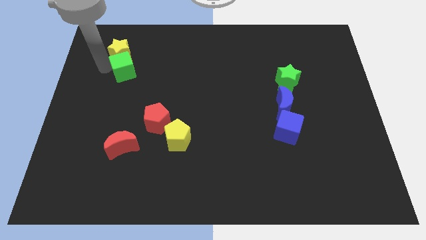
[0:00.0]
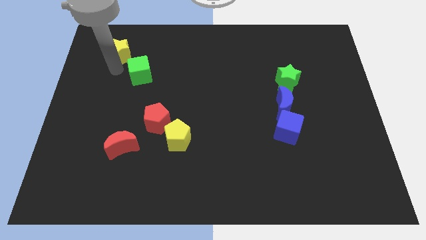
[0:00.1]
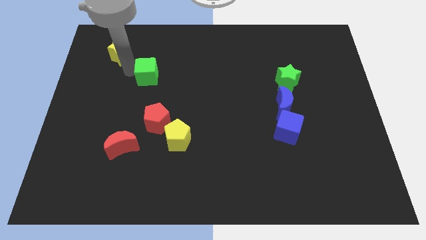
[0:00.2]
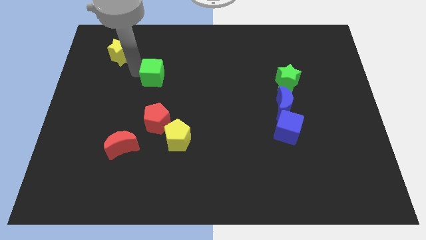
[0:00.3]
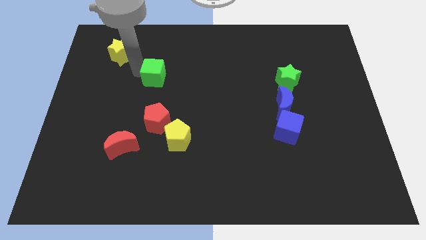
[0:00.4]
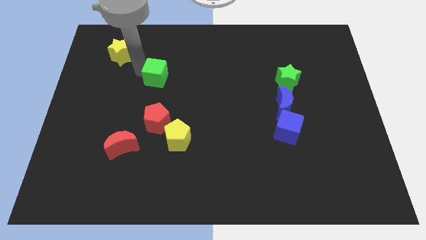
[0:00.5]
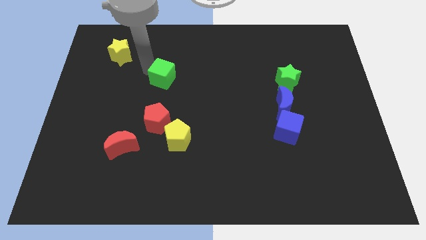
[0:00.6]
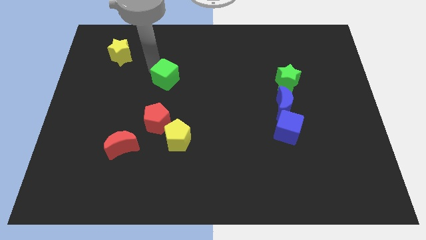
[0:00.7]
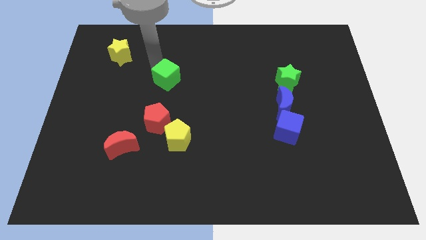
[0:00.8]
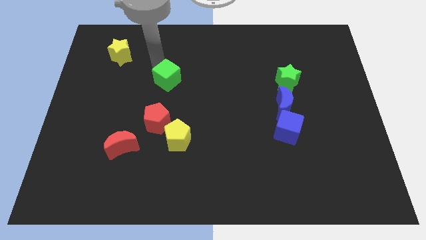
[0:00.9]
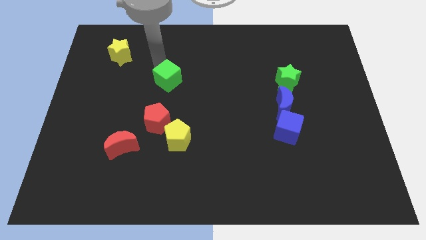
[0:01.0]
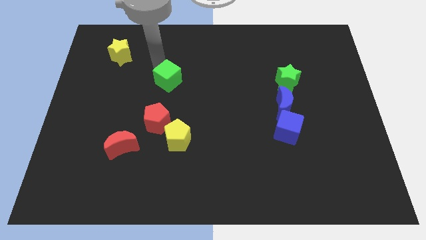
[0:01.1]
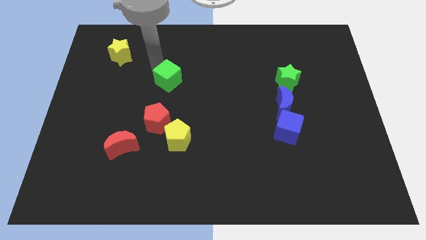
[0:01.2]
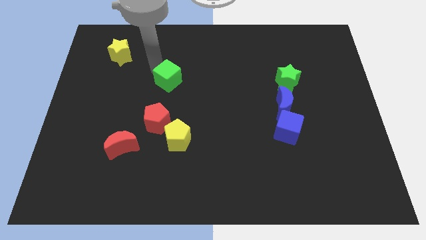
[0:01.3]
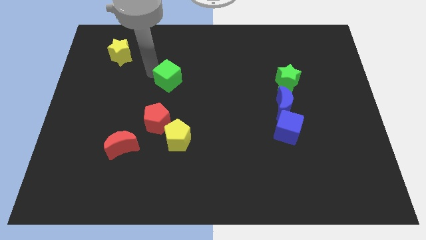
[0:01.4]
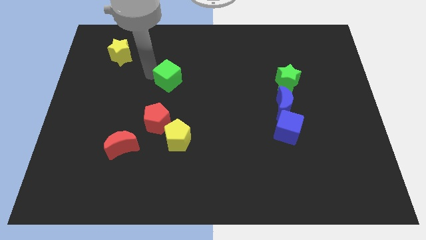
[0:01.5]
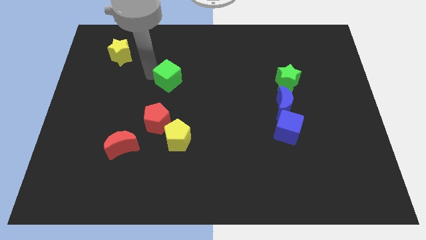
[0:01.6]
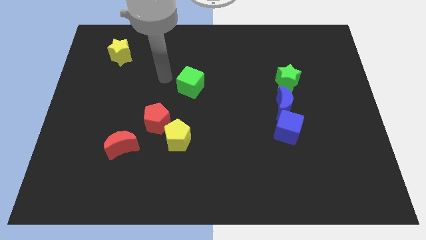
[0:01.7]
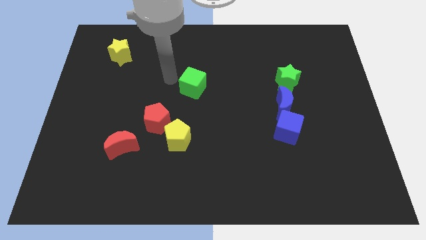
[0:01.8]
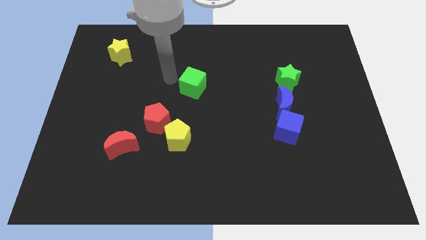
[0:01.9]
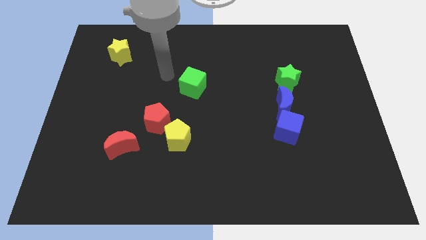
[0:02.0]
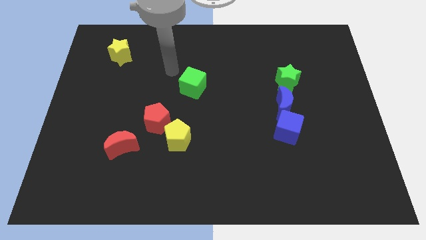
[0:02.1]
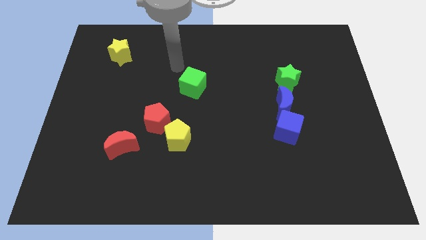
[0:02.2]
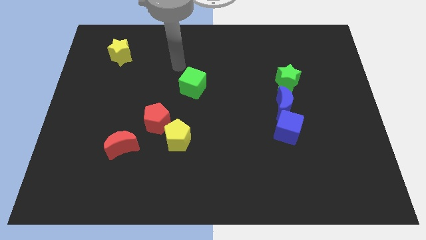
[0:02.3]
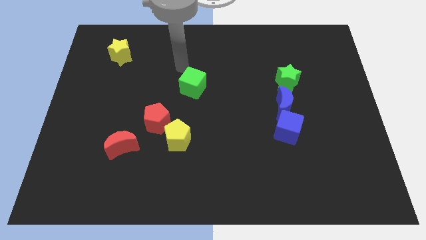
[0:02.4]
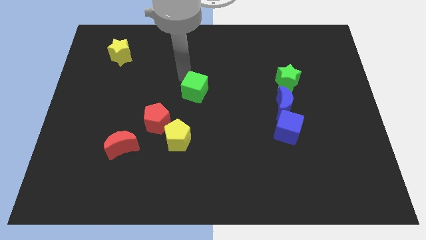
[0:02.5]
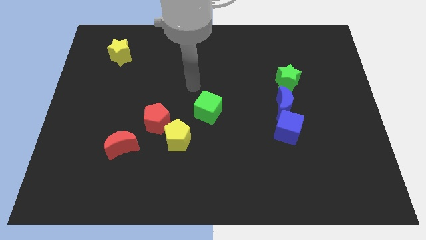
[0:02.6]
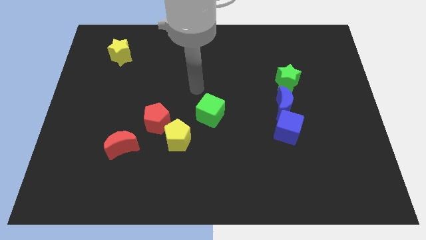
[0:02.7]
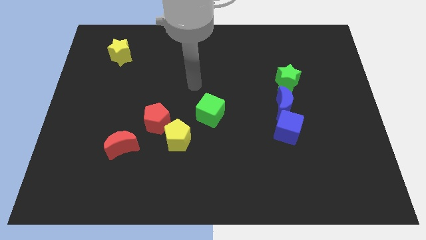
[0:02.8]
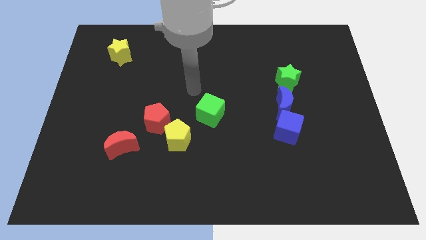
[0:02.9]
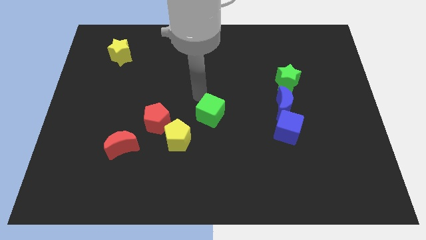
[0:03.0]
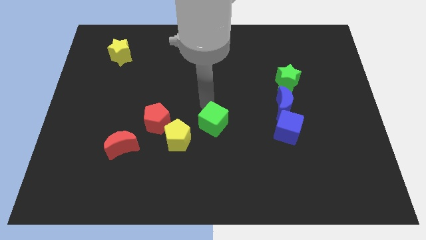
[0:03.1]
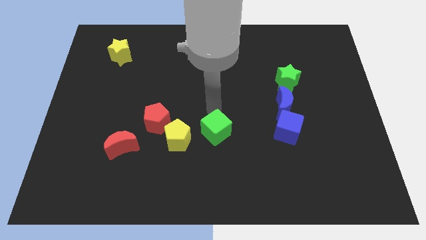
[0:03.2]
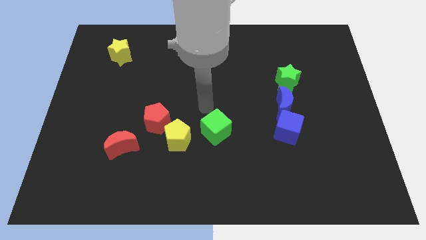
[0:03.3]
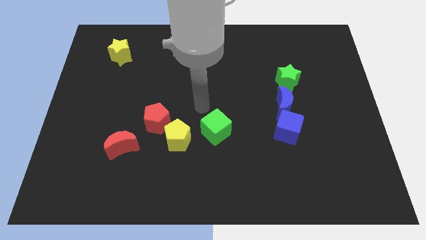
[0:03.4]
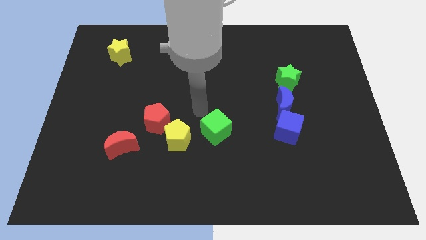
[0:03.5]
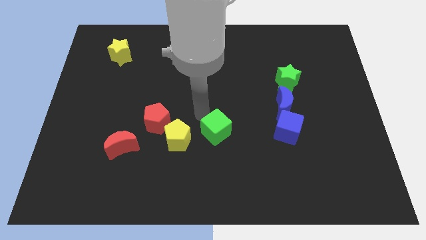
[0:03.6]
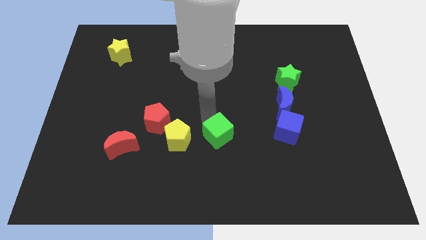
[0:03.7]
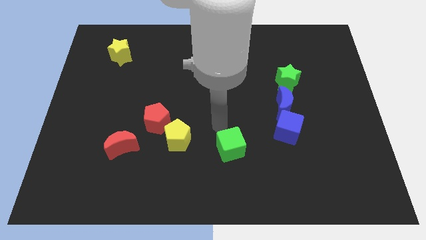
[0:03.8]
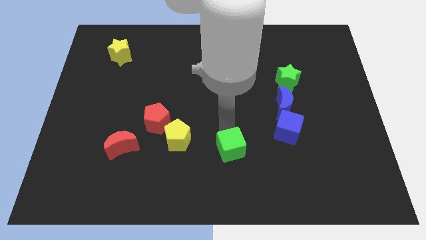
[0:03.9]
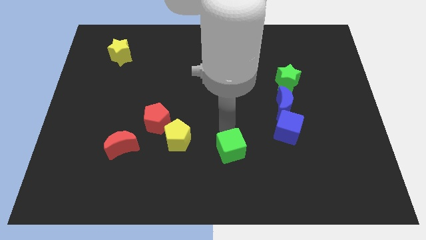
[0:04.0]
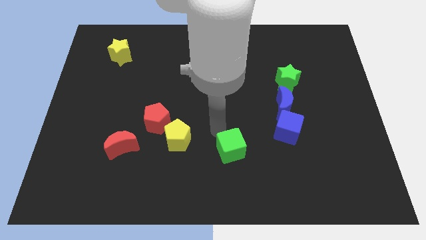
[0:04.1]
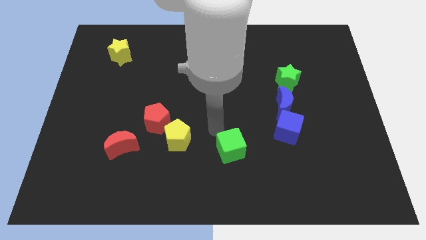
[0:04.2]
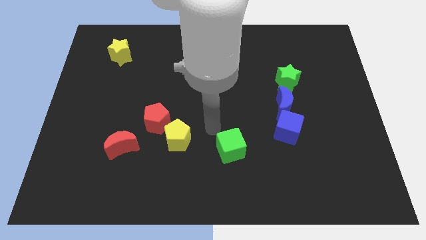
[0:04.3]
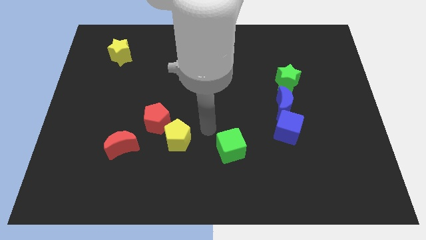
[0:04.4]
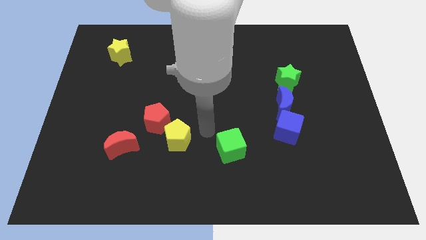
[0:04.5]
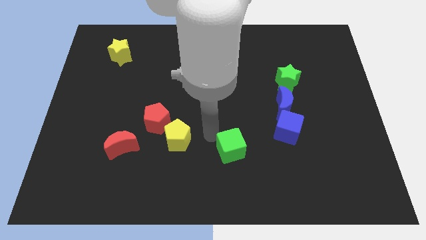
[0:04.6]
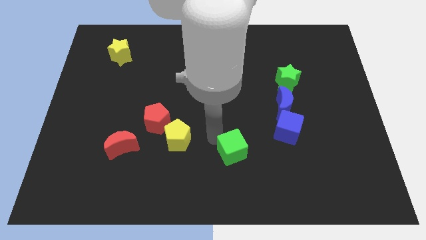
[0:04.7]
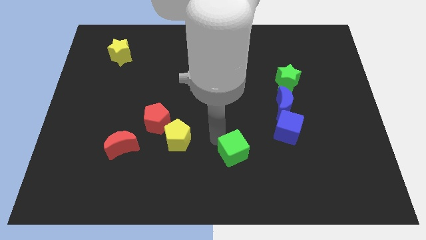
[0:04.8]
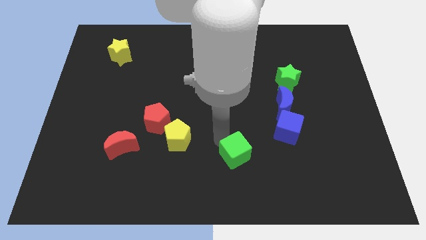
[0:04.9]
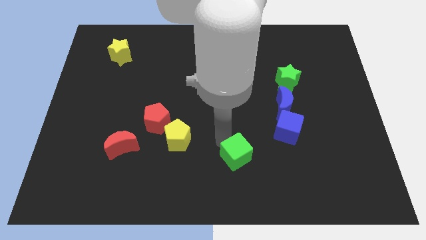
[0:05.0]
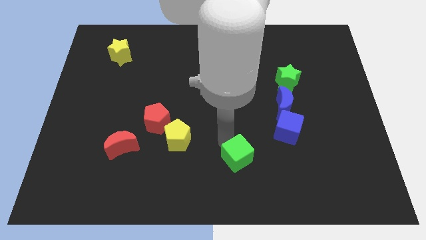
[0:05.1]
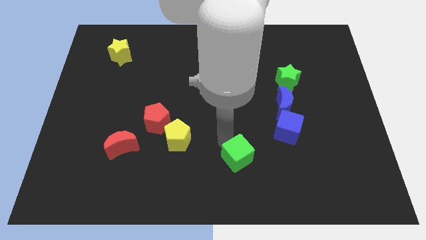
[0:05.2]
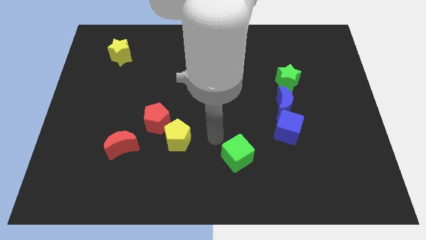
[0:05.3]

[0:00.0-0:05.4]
move the green cube downwards to the bottom right of the board

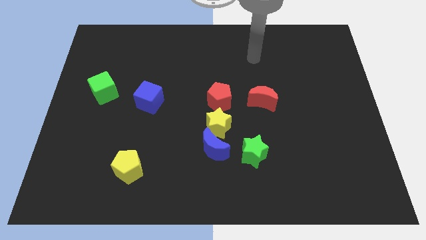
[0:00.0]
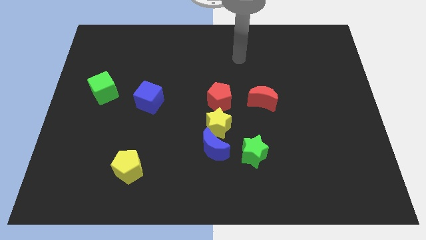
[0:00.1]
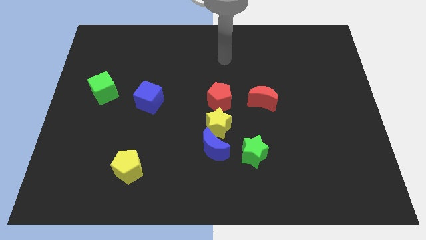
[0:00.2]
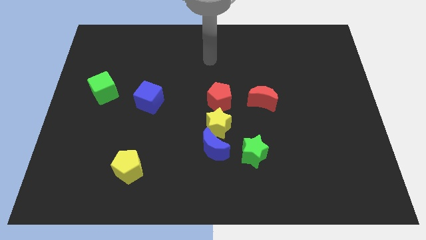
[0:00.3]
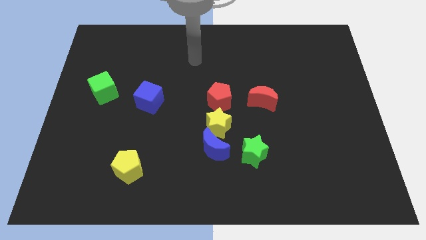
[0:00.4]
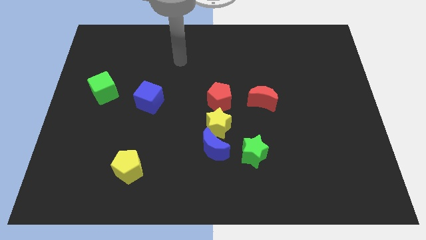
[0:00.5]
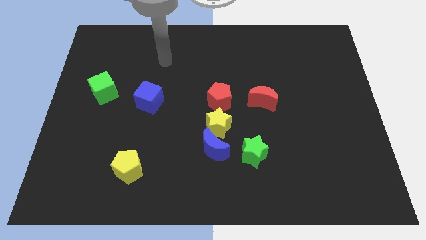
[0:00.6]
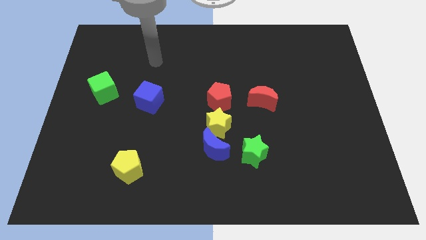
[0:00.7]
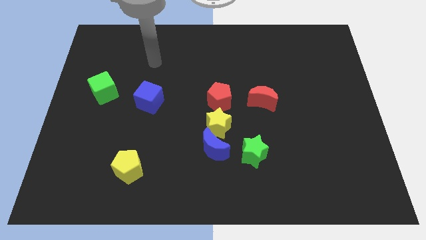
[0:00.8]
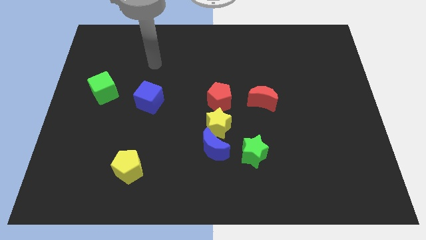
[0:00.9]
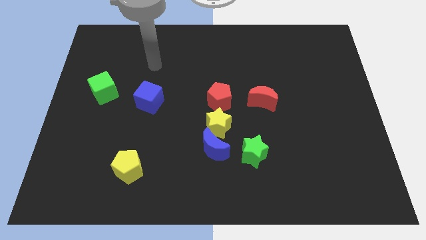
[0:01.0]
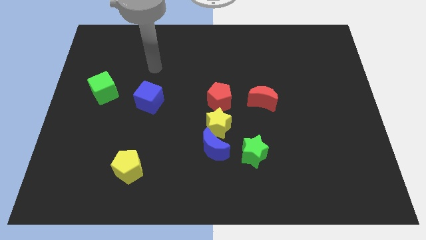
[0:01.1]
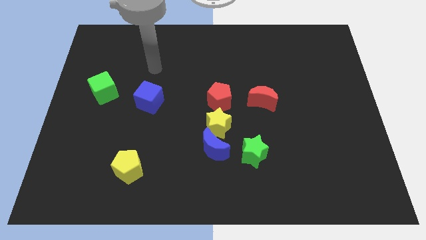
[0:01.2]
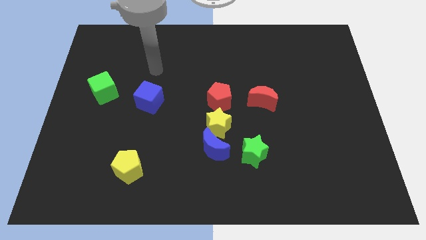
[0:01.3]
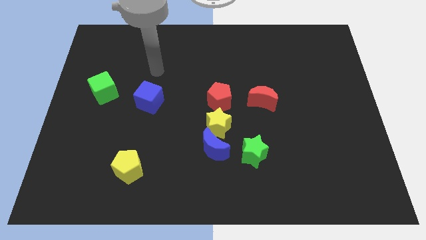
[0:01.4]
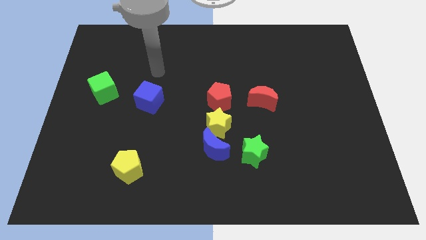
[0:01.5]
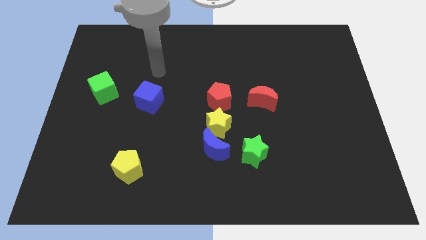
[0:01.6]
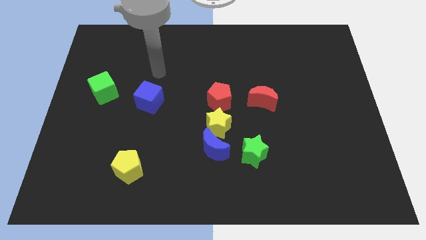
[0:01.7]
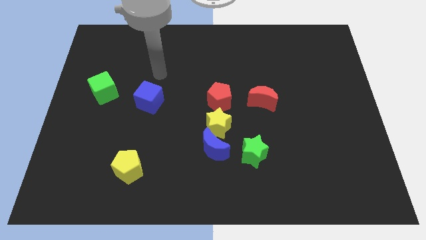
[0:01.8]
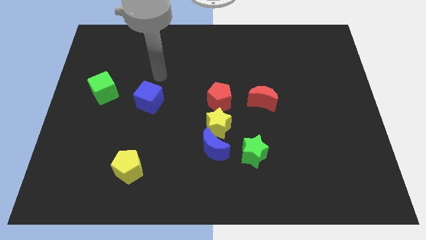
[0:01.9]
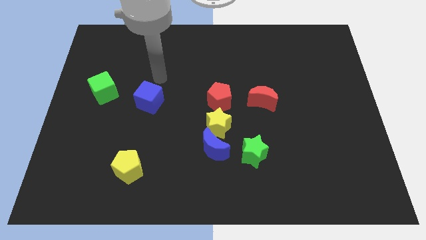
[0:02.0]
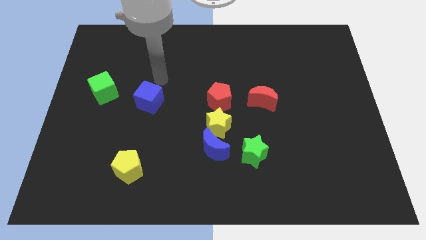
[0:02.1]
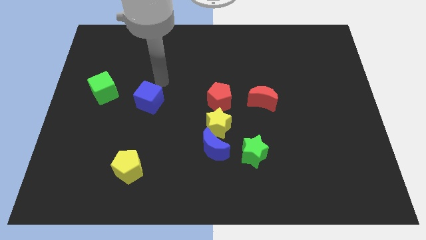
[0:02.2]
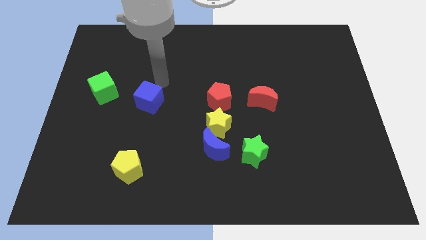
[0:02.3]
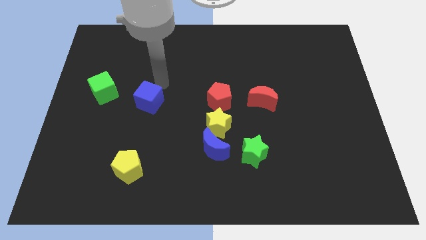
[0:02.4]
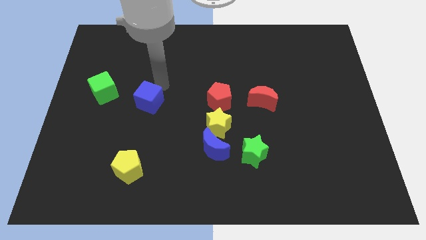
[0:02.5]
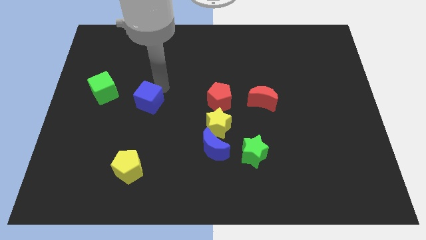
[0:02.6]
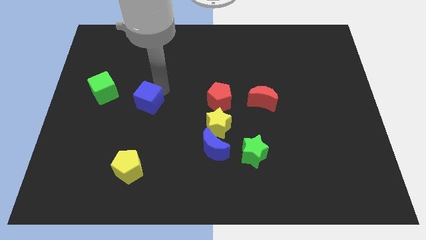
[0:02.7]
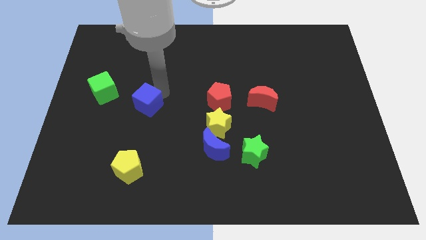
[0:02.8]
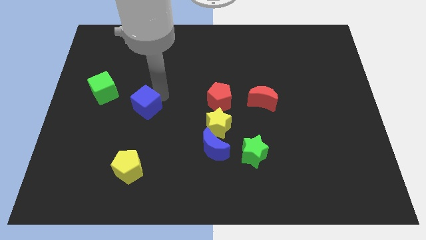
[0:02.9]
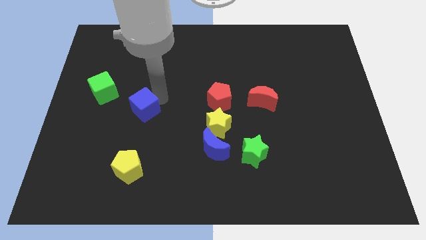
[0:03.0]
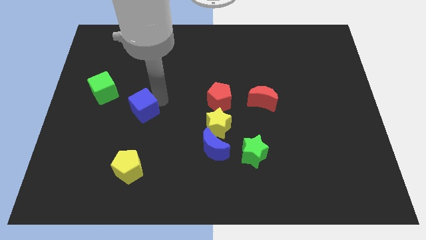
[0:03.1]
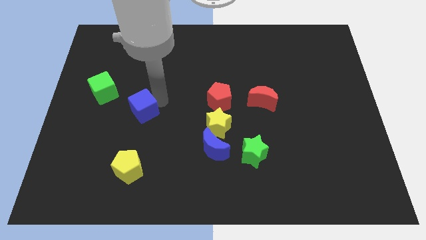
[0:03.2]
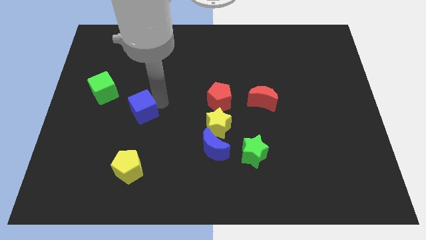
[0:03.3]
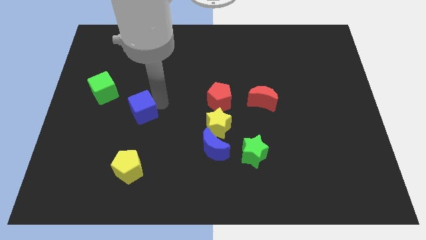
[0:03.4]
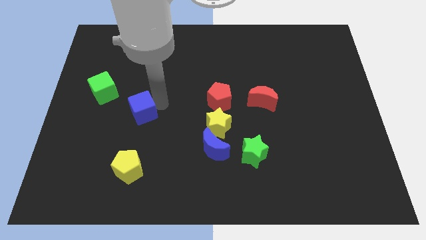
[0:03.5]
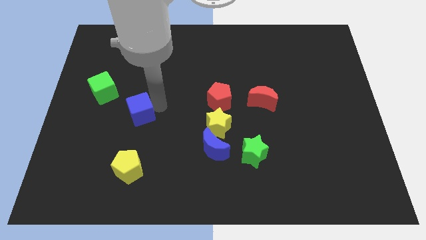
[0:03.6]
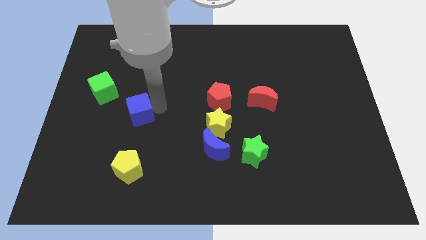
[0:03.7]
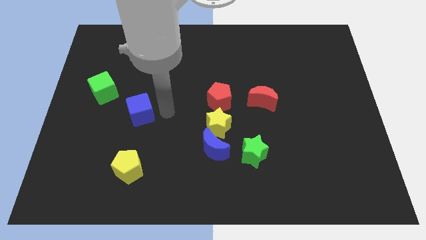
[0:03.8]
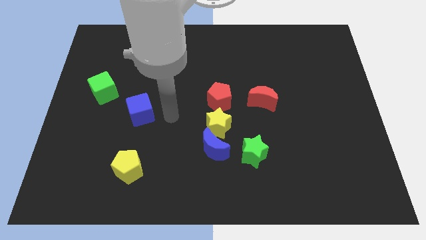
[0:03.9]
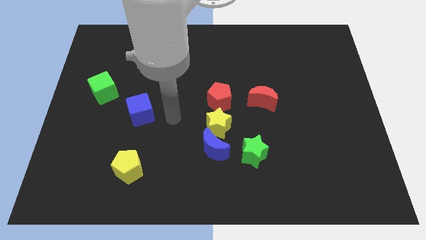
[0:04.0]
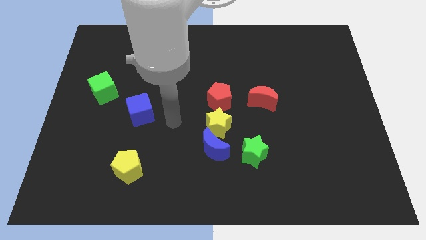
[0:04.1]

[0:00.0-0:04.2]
push the blue cube towards the yellow pentagon
